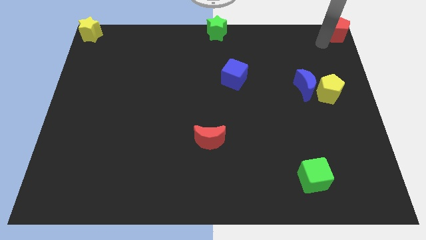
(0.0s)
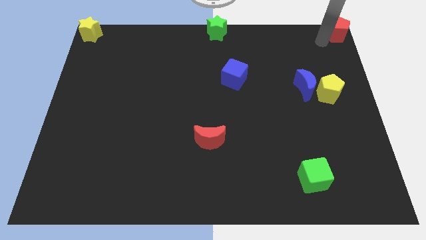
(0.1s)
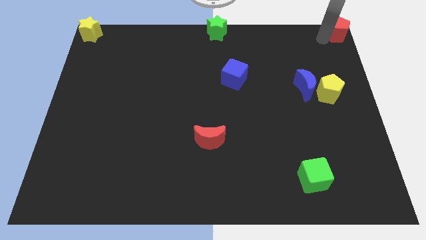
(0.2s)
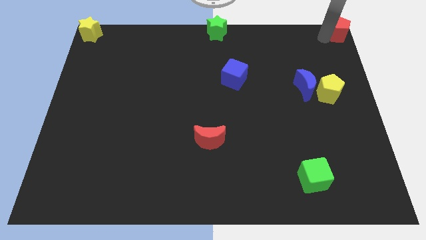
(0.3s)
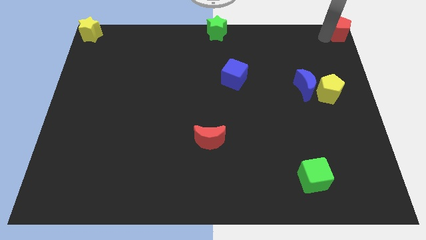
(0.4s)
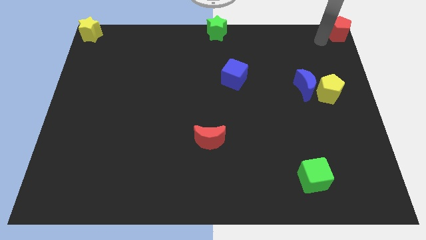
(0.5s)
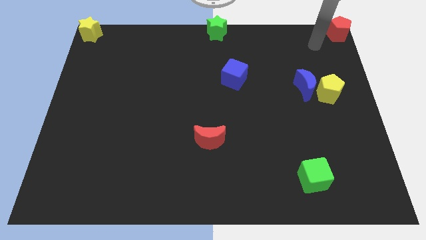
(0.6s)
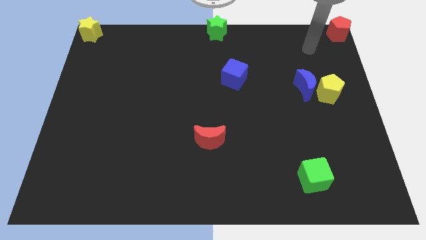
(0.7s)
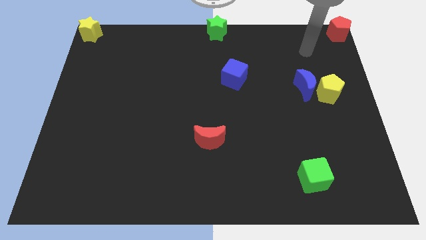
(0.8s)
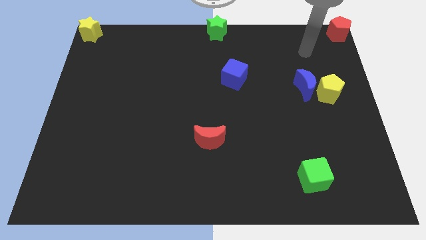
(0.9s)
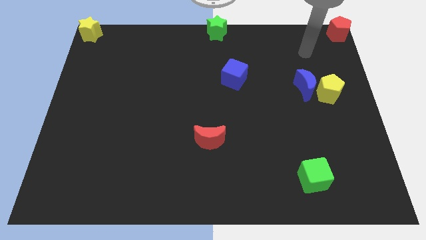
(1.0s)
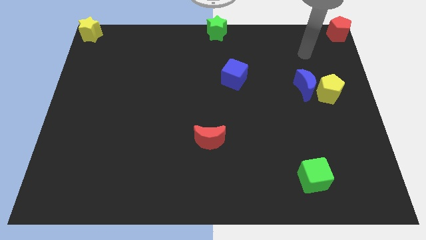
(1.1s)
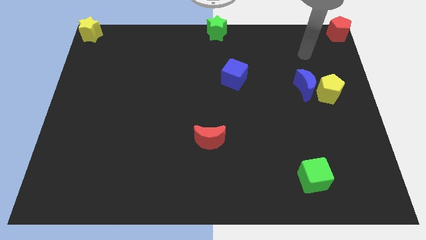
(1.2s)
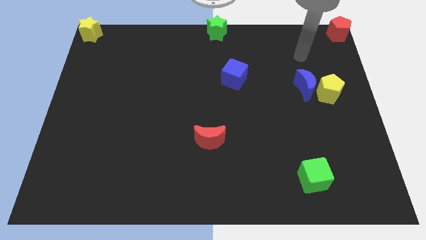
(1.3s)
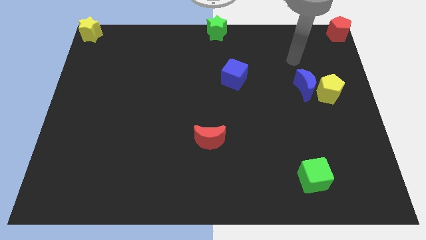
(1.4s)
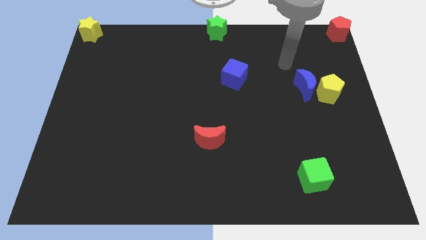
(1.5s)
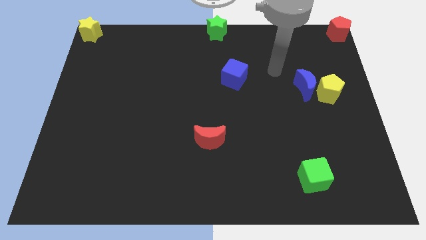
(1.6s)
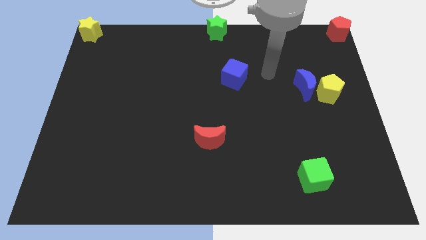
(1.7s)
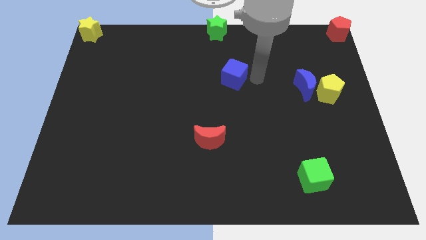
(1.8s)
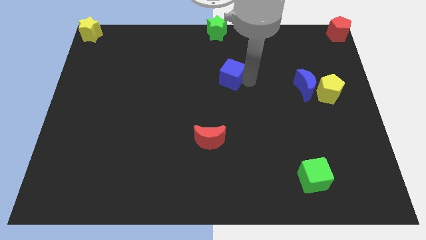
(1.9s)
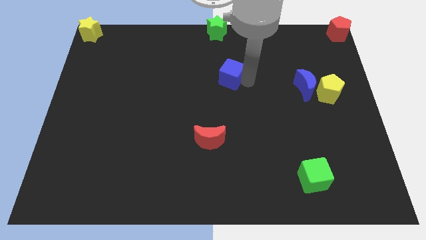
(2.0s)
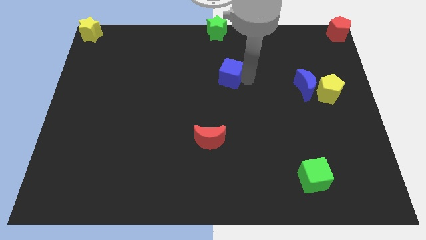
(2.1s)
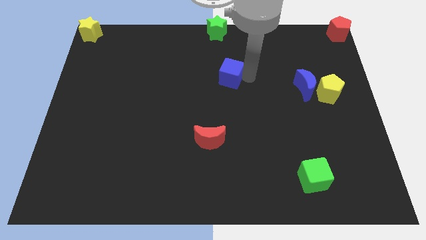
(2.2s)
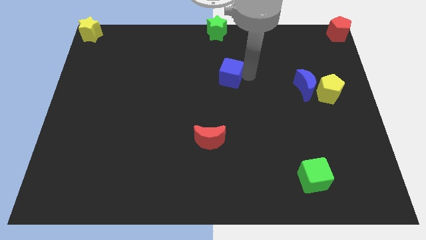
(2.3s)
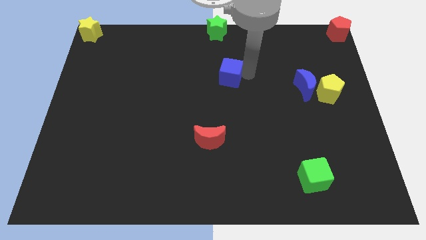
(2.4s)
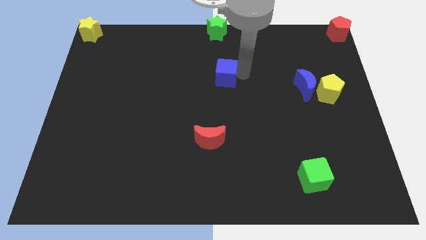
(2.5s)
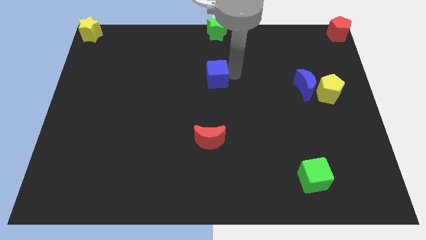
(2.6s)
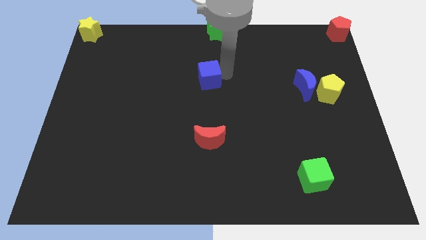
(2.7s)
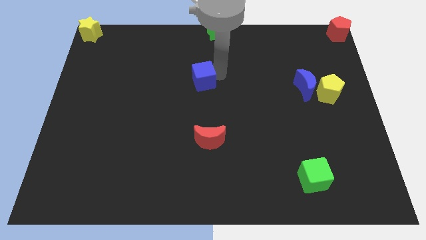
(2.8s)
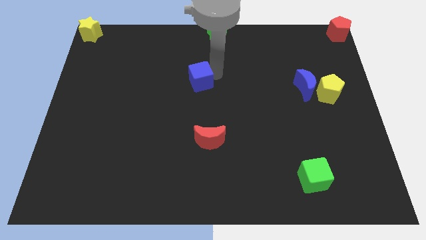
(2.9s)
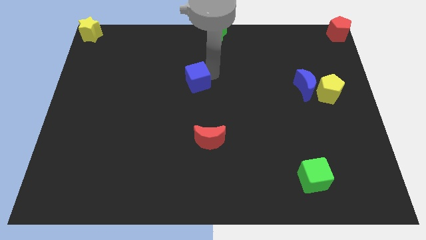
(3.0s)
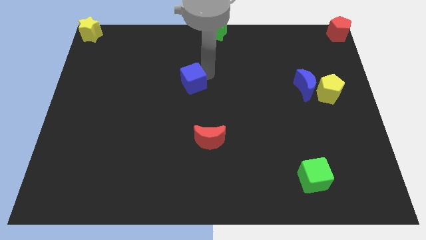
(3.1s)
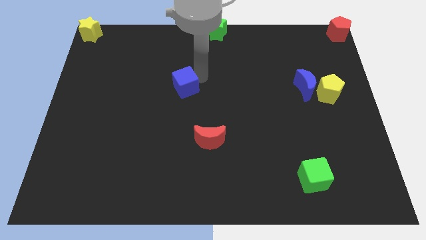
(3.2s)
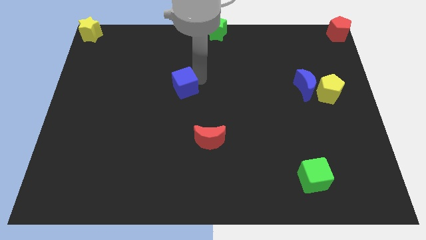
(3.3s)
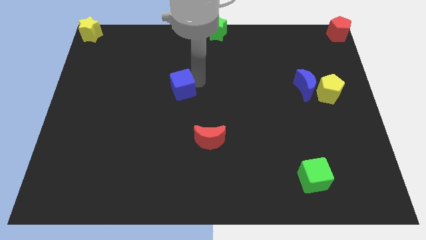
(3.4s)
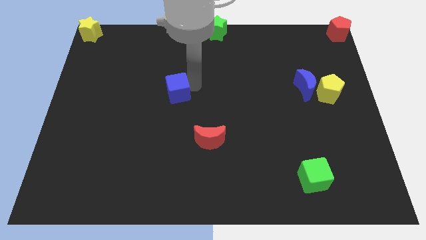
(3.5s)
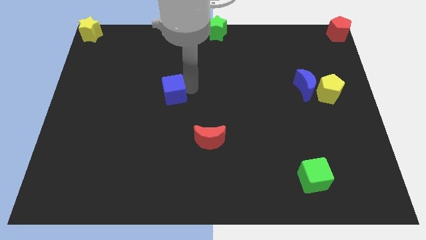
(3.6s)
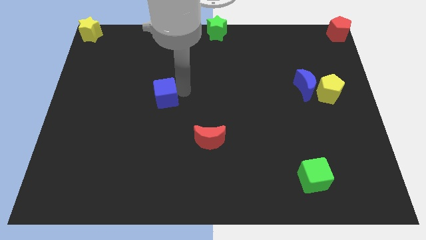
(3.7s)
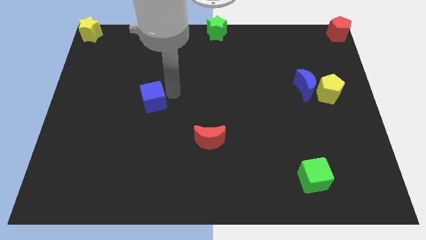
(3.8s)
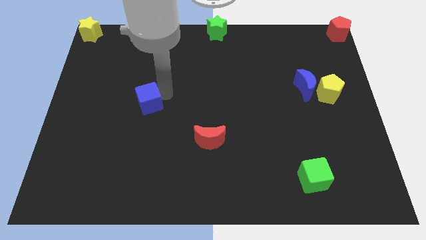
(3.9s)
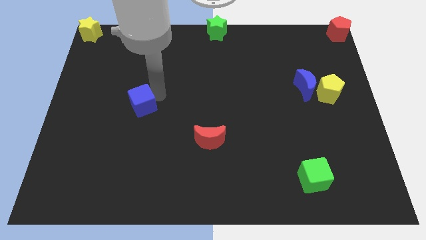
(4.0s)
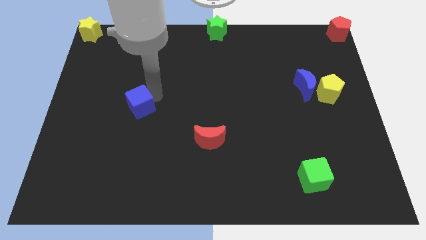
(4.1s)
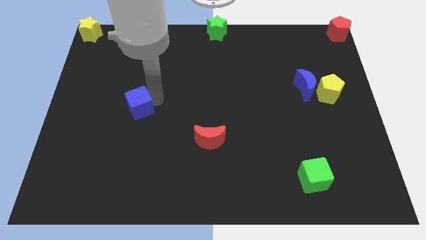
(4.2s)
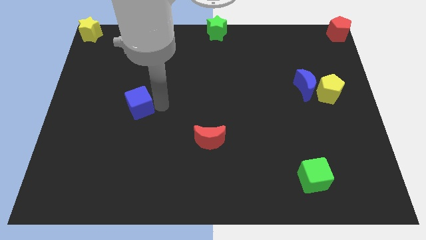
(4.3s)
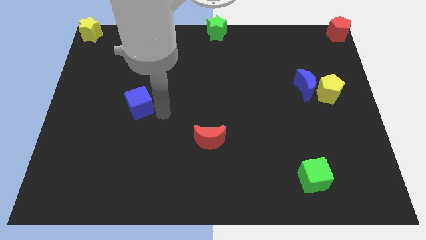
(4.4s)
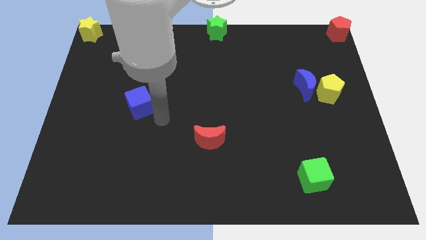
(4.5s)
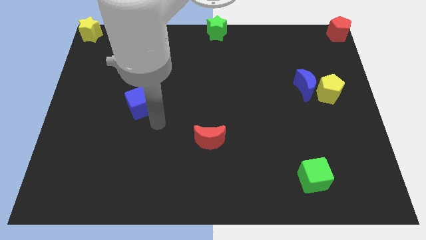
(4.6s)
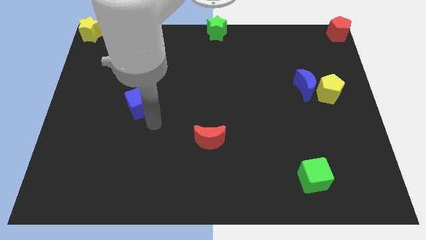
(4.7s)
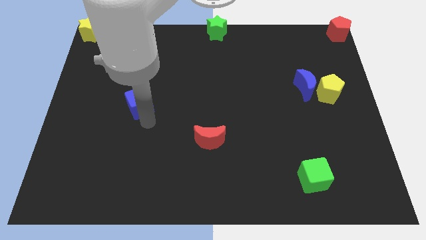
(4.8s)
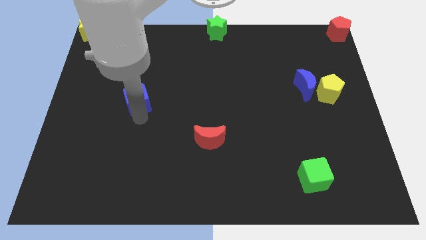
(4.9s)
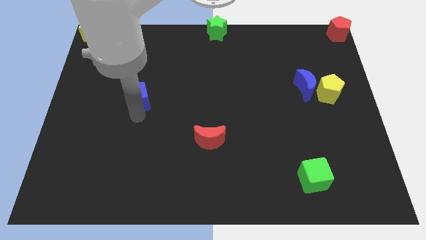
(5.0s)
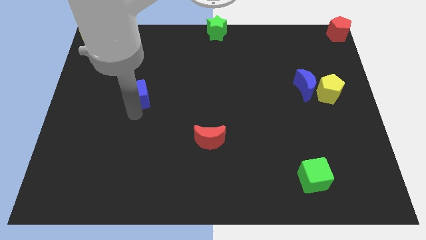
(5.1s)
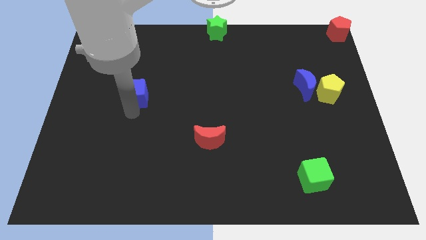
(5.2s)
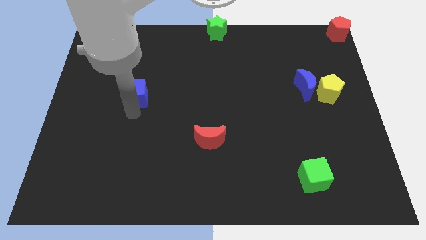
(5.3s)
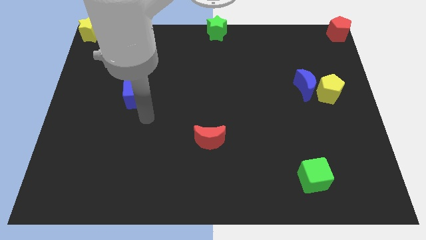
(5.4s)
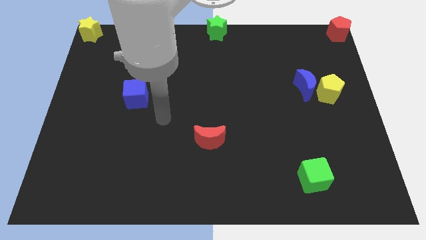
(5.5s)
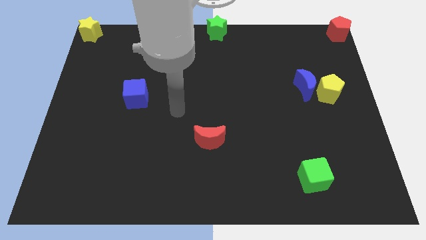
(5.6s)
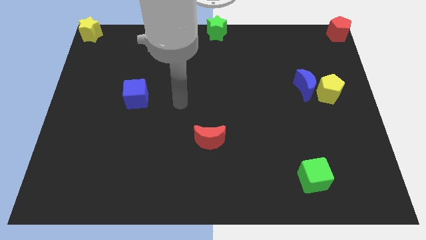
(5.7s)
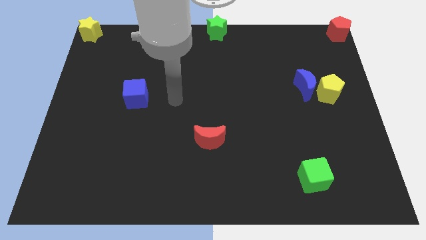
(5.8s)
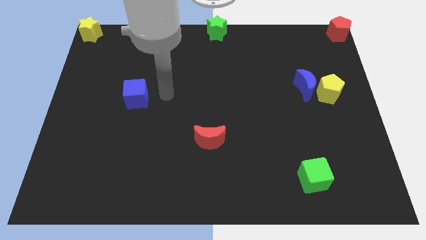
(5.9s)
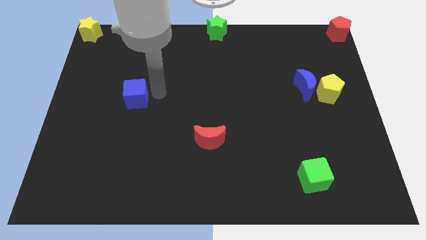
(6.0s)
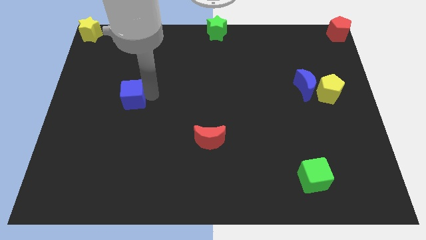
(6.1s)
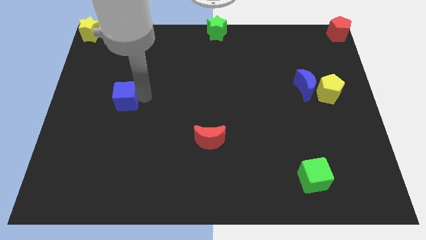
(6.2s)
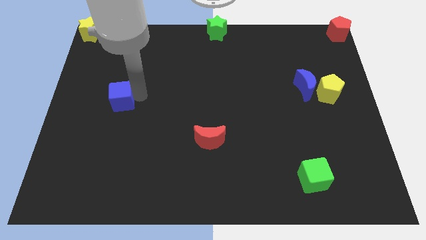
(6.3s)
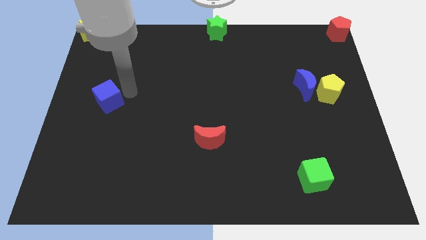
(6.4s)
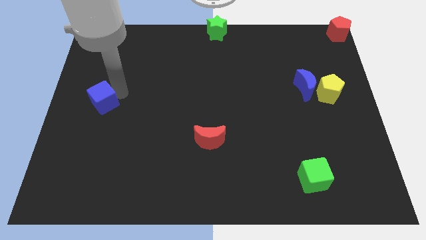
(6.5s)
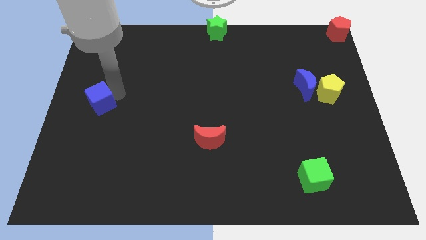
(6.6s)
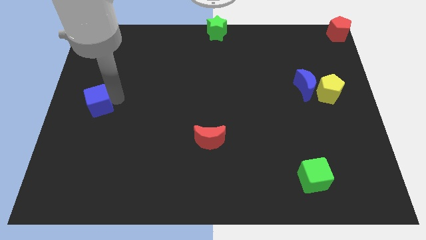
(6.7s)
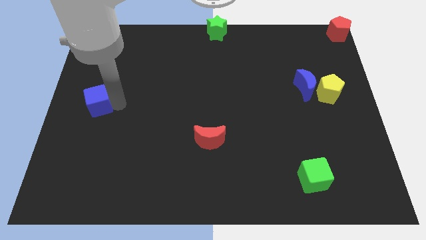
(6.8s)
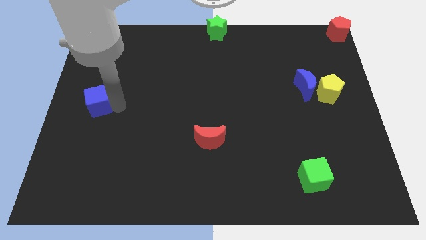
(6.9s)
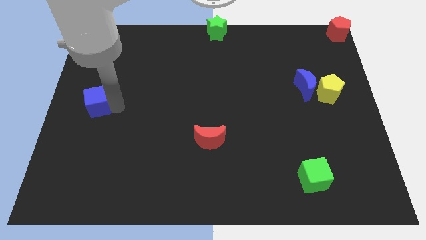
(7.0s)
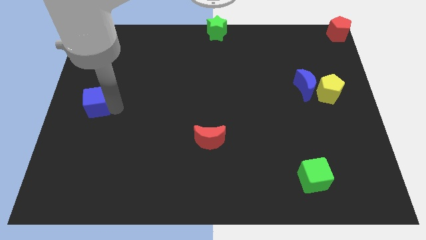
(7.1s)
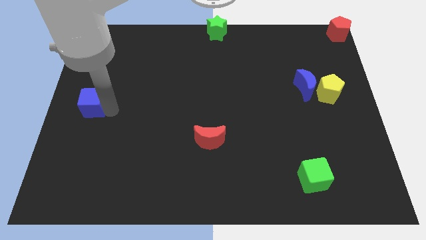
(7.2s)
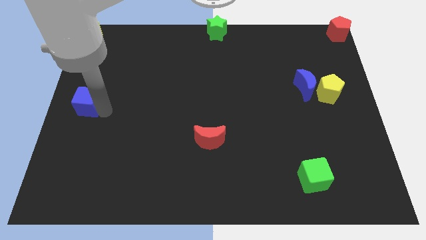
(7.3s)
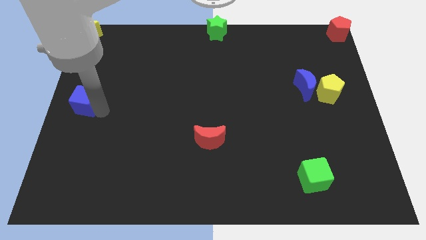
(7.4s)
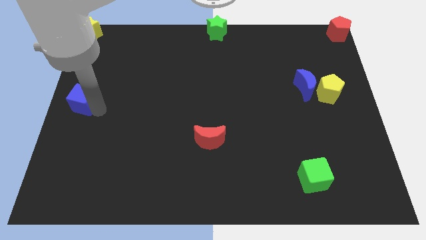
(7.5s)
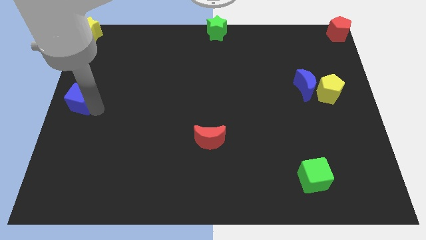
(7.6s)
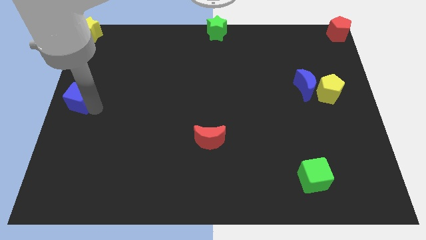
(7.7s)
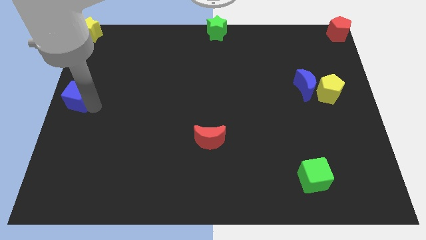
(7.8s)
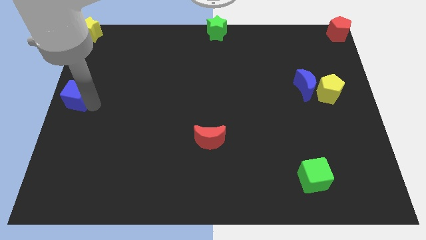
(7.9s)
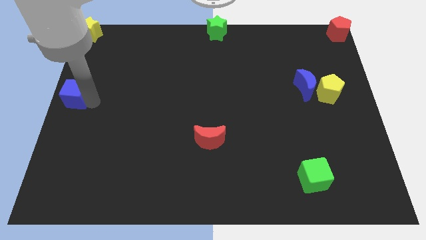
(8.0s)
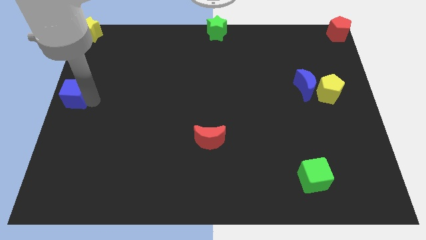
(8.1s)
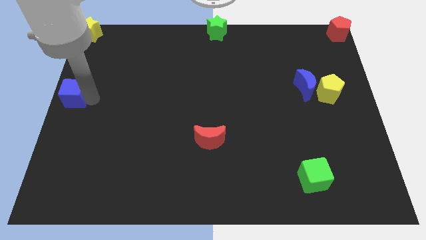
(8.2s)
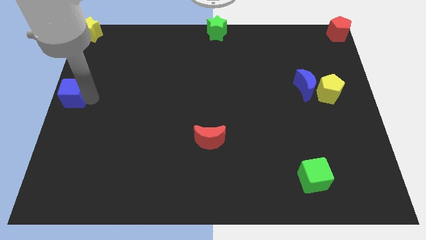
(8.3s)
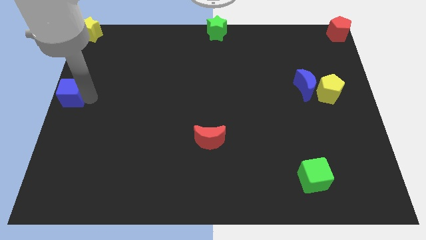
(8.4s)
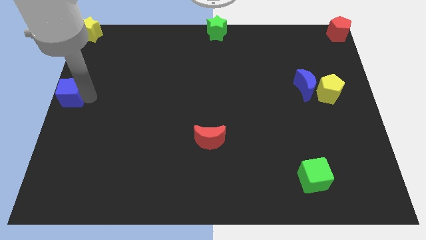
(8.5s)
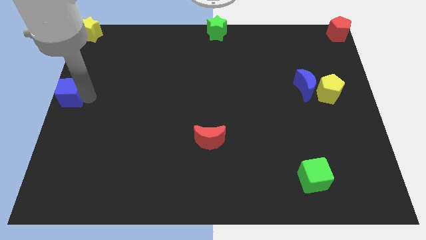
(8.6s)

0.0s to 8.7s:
place blue cube below the yellow star leaving some space between them

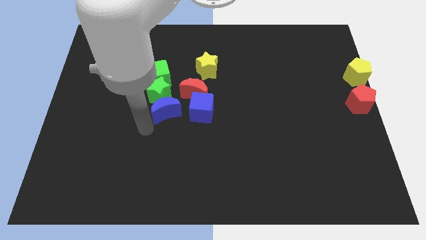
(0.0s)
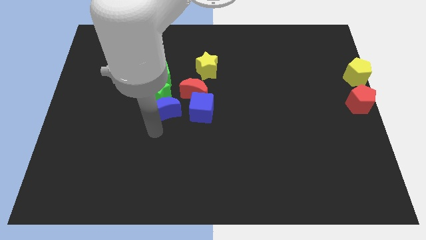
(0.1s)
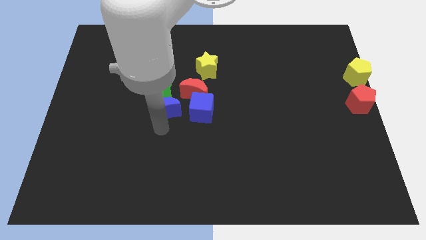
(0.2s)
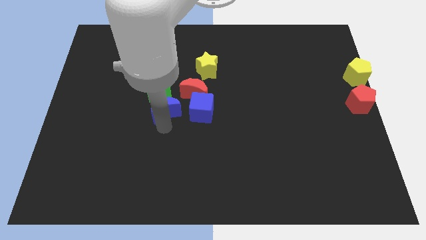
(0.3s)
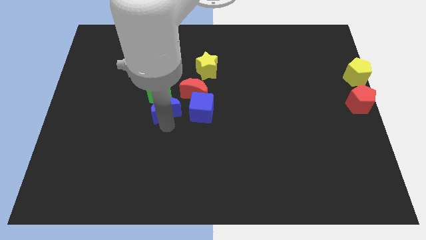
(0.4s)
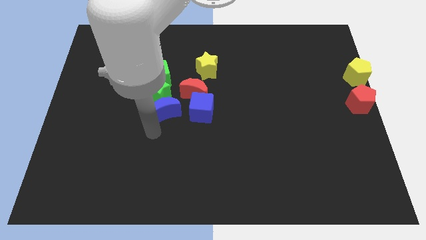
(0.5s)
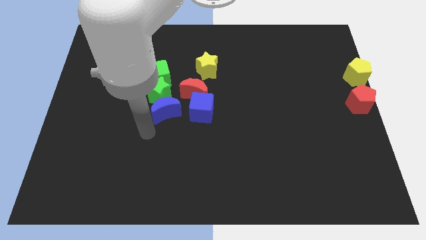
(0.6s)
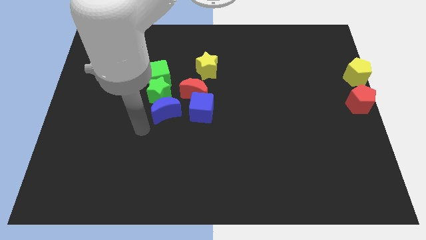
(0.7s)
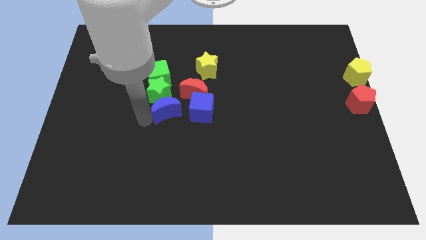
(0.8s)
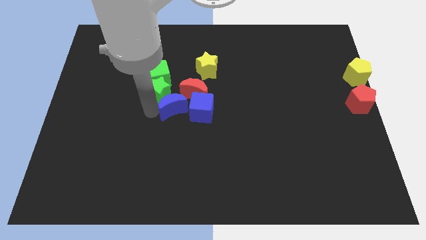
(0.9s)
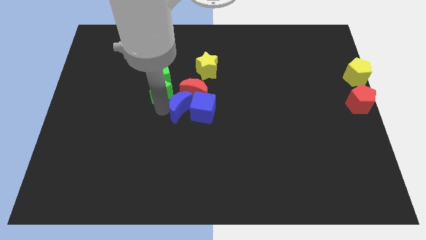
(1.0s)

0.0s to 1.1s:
separate the blue crescent from the green star
